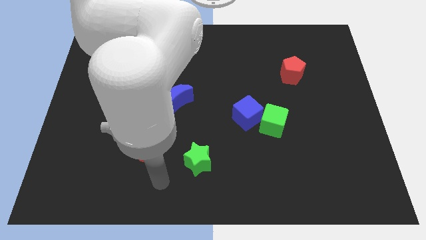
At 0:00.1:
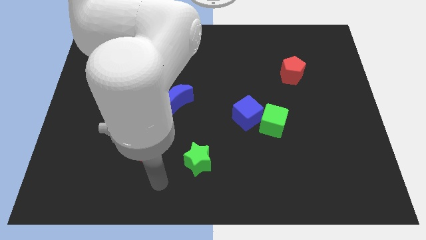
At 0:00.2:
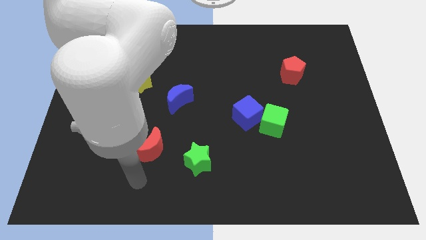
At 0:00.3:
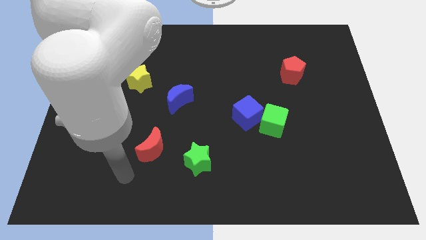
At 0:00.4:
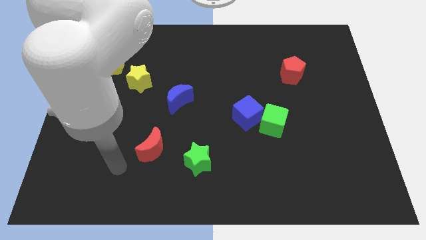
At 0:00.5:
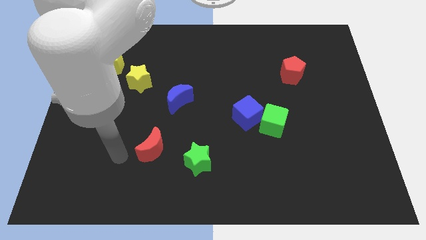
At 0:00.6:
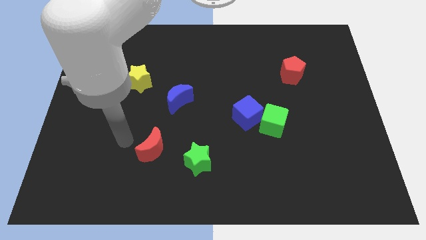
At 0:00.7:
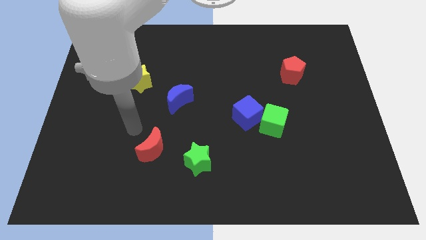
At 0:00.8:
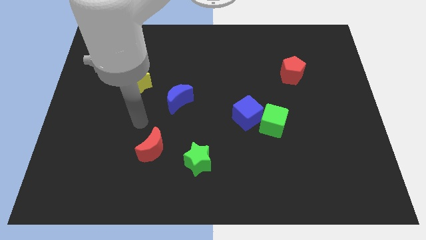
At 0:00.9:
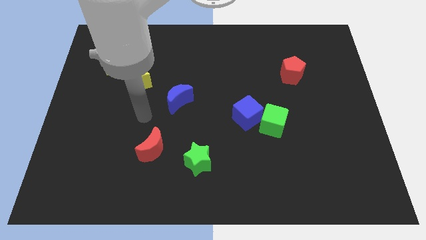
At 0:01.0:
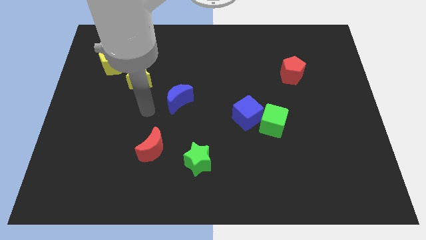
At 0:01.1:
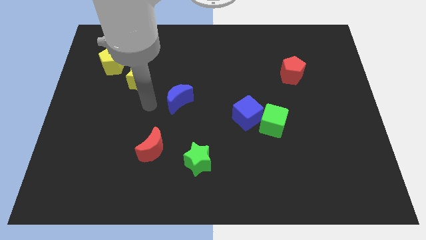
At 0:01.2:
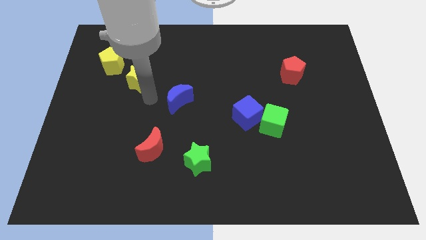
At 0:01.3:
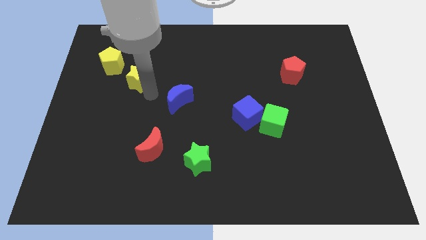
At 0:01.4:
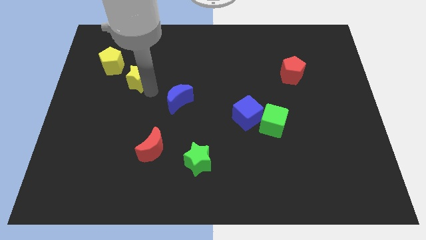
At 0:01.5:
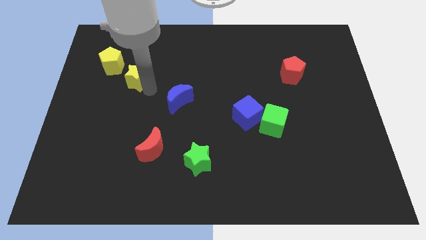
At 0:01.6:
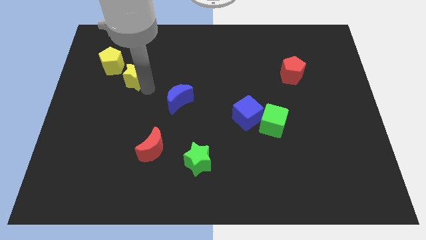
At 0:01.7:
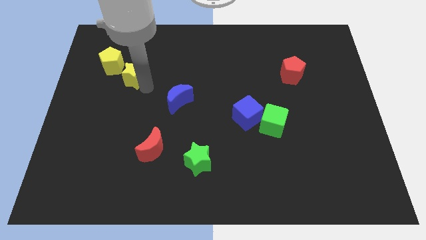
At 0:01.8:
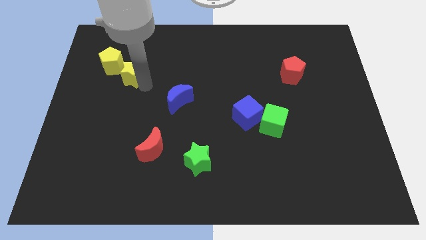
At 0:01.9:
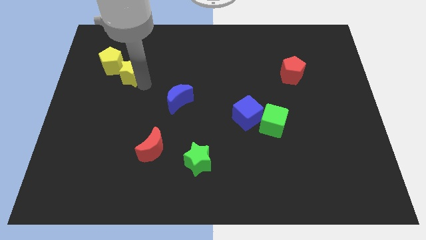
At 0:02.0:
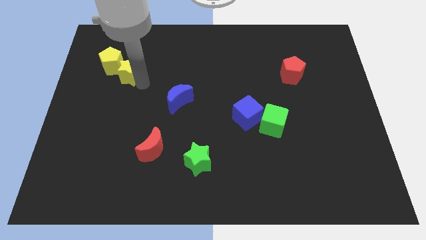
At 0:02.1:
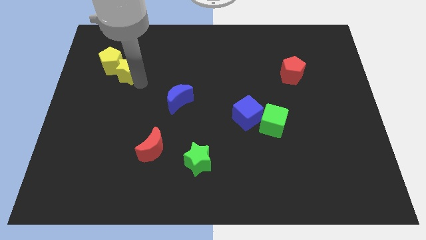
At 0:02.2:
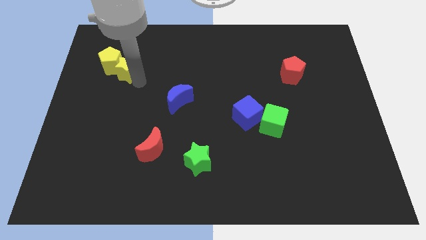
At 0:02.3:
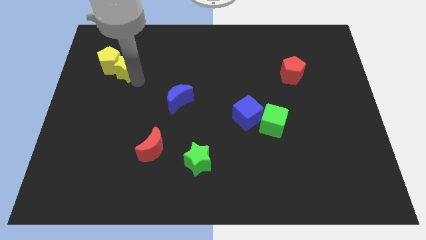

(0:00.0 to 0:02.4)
slide the yellow star close to the yellow pentagon

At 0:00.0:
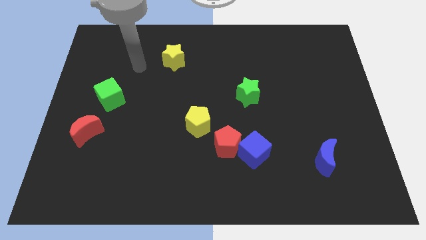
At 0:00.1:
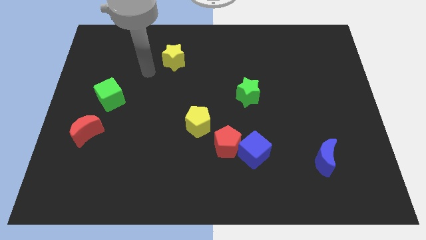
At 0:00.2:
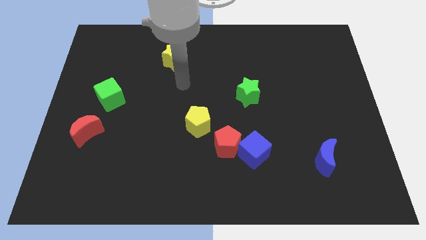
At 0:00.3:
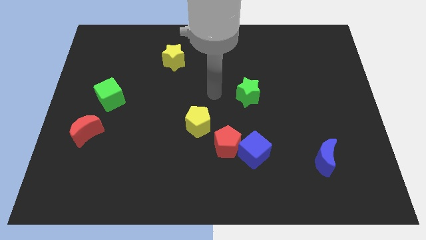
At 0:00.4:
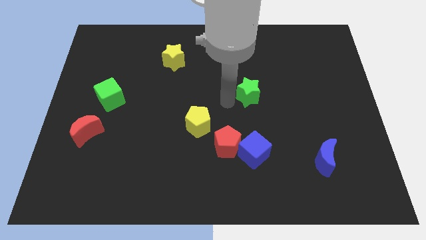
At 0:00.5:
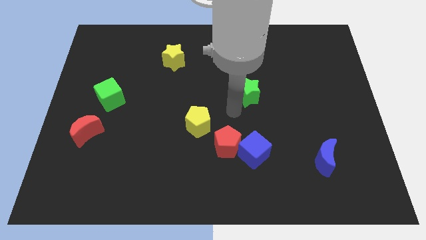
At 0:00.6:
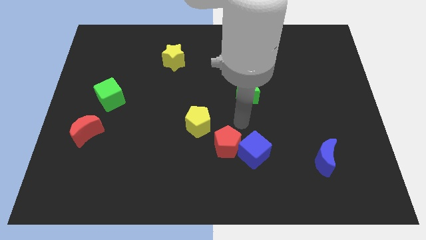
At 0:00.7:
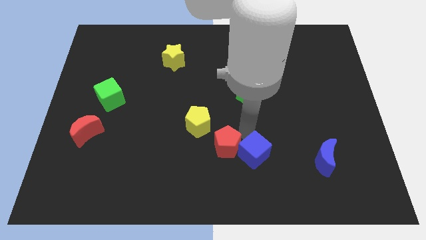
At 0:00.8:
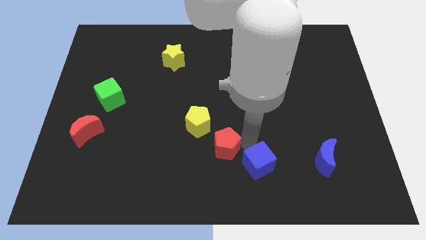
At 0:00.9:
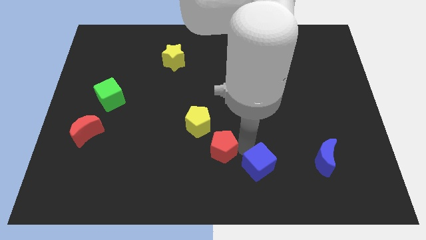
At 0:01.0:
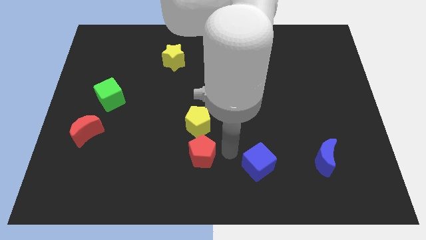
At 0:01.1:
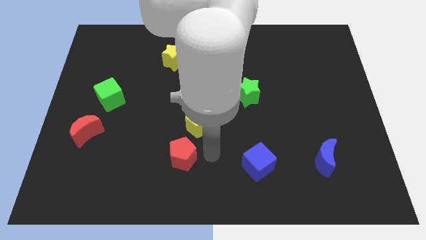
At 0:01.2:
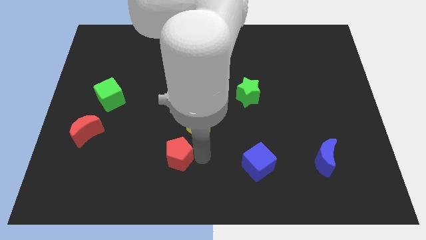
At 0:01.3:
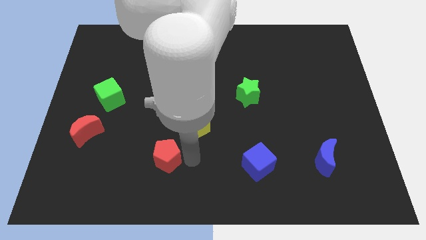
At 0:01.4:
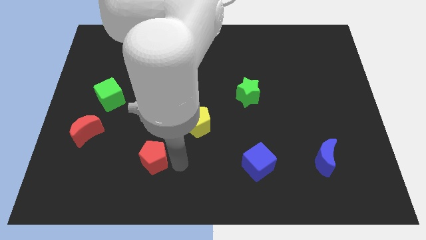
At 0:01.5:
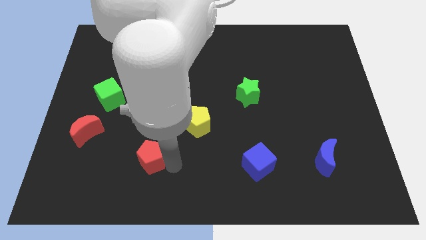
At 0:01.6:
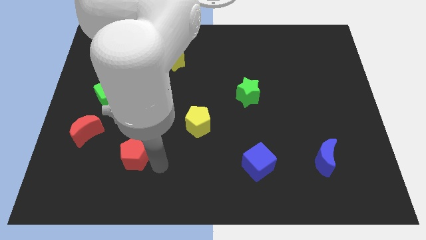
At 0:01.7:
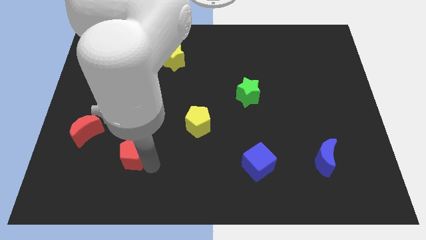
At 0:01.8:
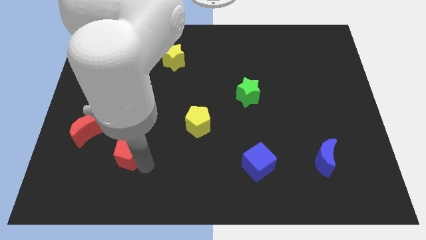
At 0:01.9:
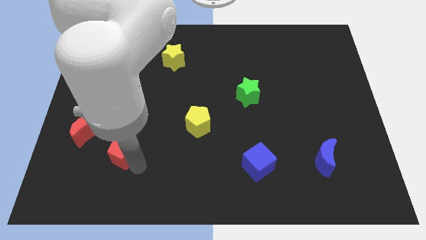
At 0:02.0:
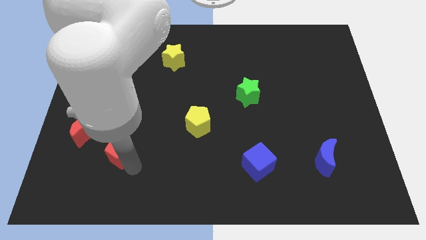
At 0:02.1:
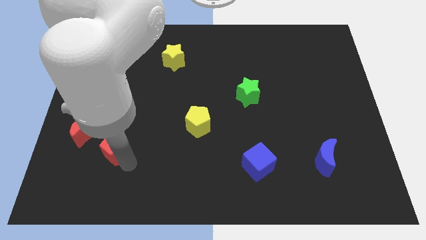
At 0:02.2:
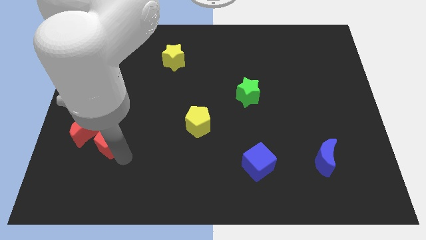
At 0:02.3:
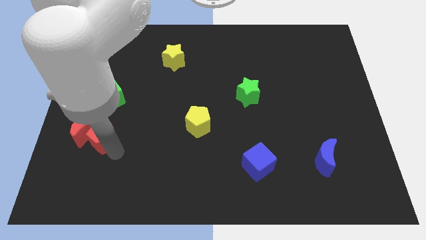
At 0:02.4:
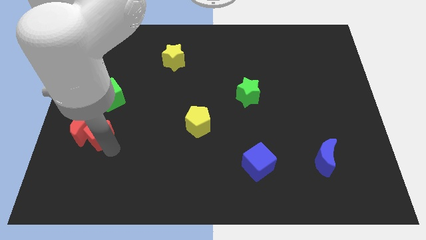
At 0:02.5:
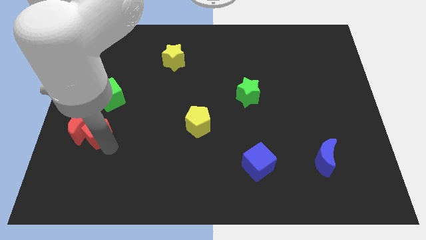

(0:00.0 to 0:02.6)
put the red pentagon next to the red moon

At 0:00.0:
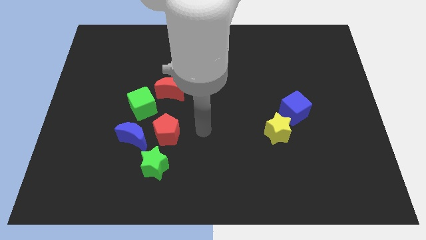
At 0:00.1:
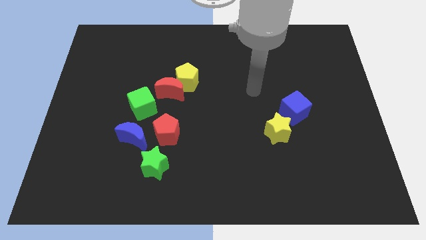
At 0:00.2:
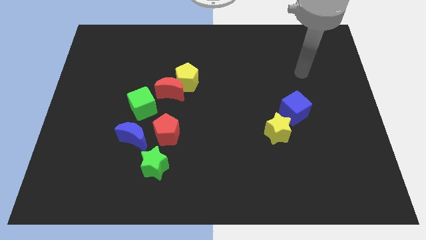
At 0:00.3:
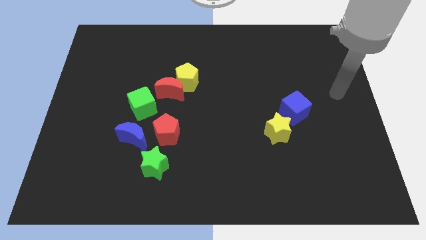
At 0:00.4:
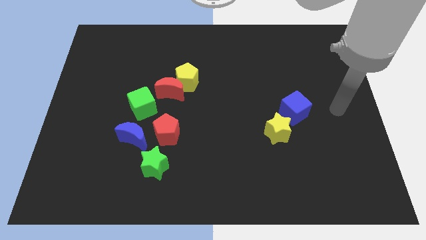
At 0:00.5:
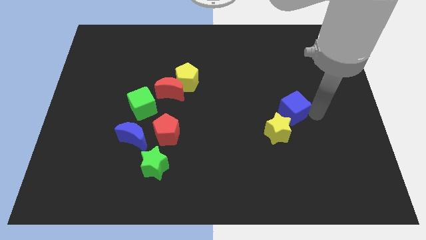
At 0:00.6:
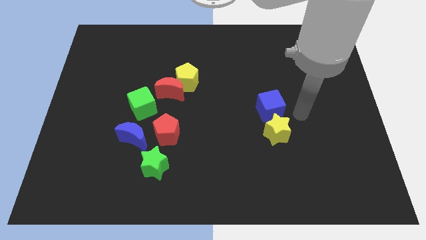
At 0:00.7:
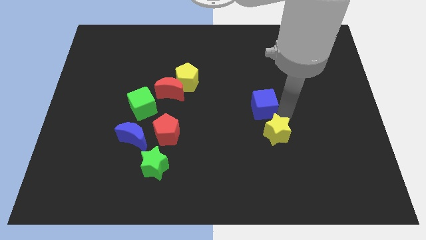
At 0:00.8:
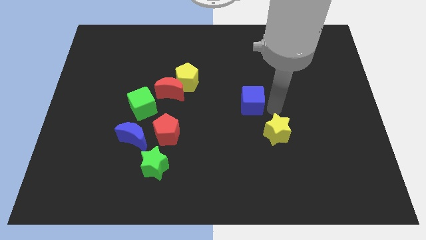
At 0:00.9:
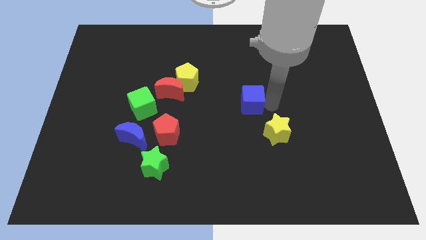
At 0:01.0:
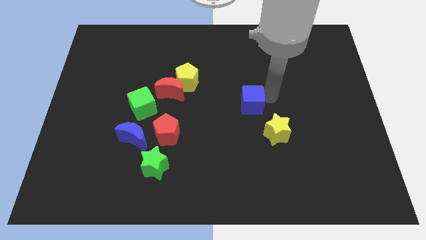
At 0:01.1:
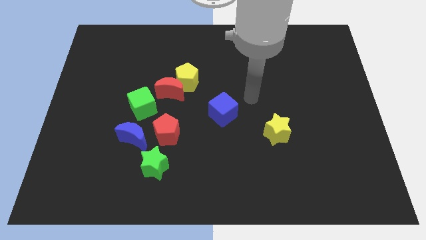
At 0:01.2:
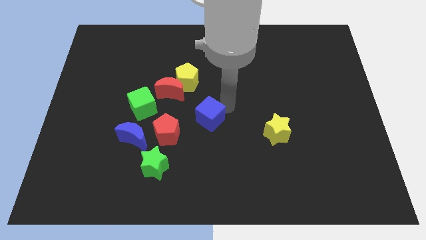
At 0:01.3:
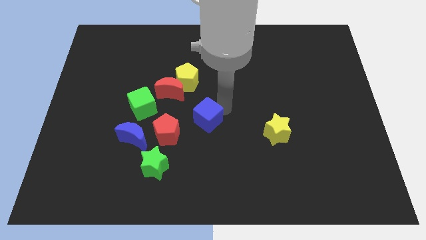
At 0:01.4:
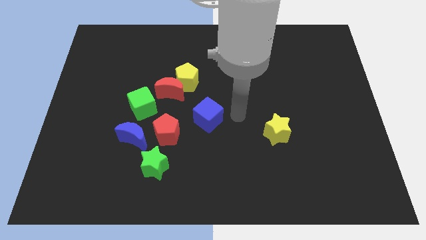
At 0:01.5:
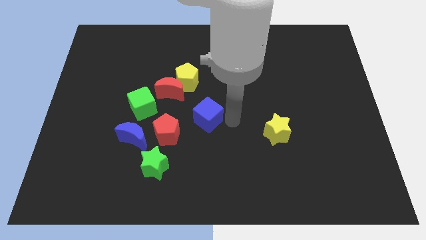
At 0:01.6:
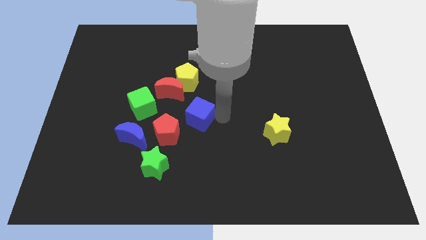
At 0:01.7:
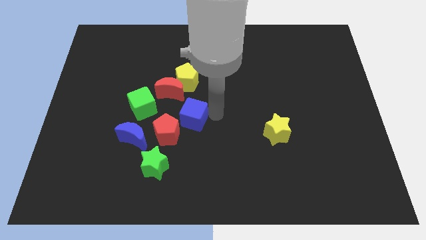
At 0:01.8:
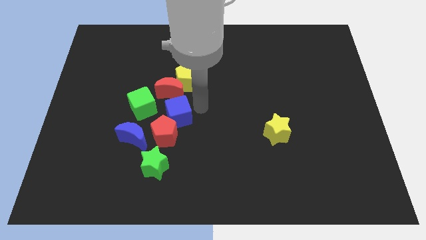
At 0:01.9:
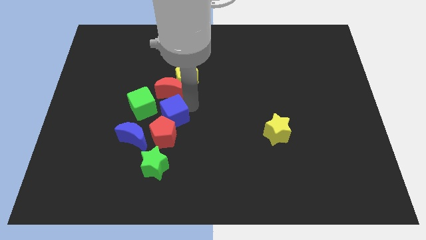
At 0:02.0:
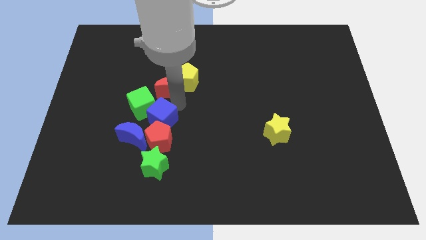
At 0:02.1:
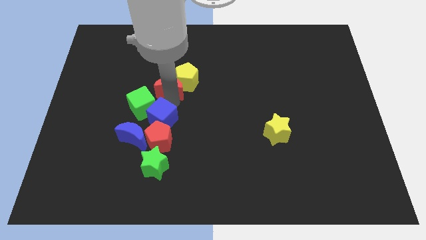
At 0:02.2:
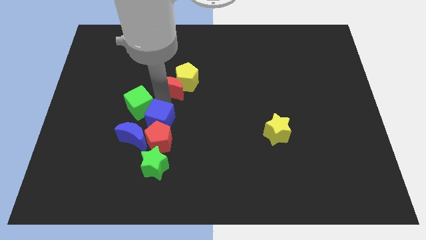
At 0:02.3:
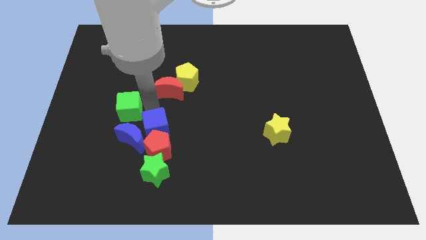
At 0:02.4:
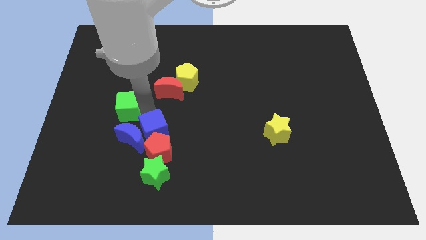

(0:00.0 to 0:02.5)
put the blue cube next to the blue moon

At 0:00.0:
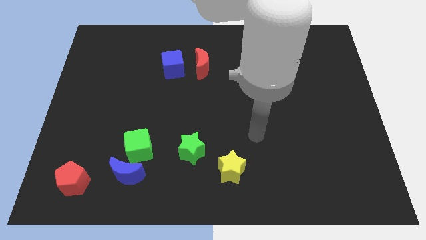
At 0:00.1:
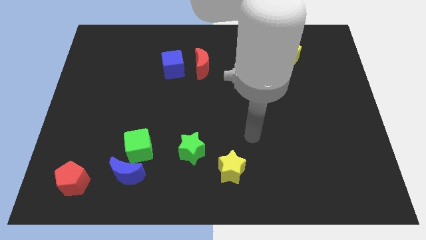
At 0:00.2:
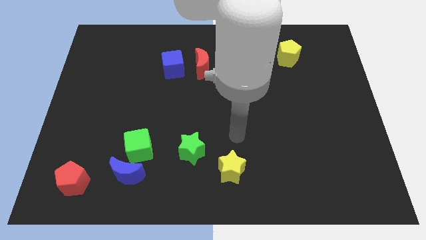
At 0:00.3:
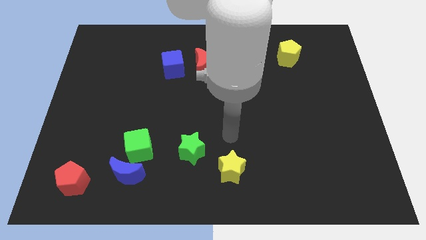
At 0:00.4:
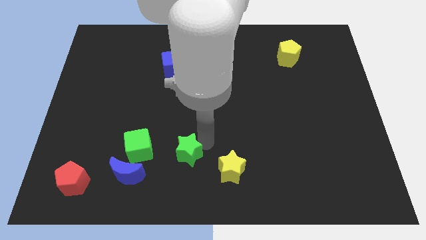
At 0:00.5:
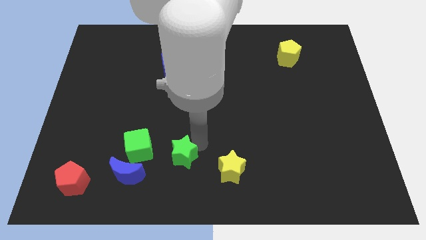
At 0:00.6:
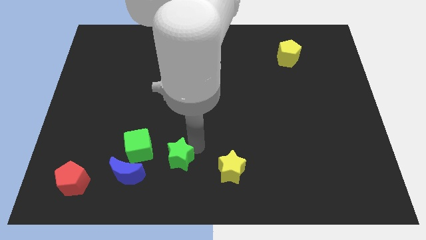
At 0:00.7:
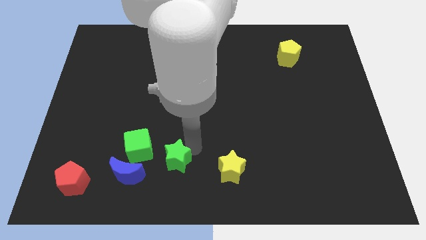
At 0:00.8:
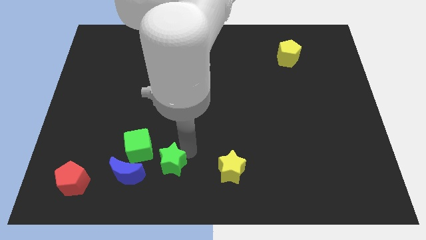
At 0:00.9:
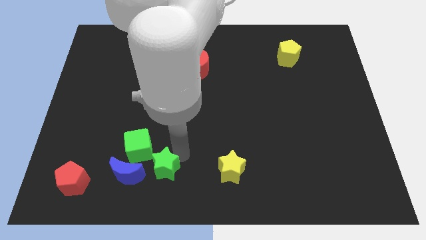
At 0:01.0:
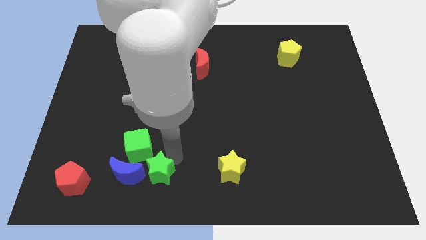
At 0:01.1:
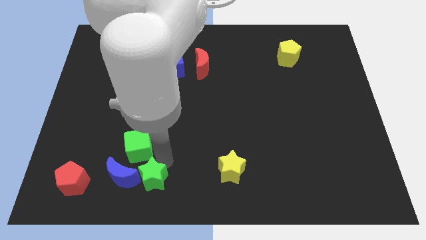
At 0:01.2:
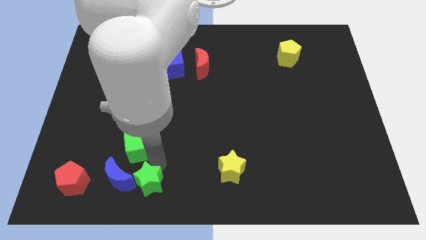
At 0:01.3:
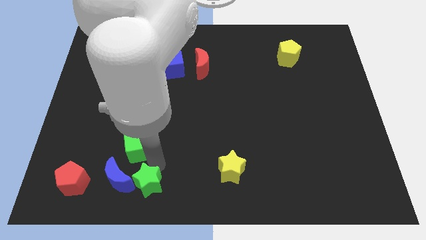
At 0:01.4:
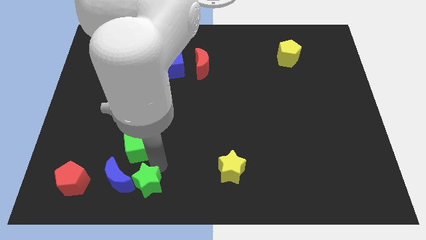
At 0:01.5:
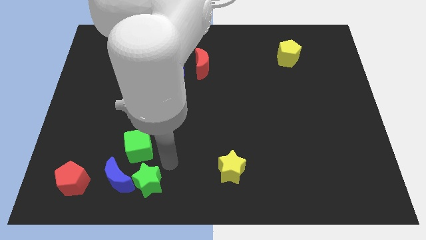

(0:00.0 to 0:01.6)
put the green star towards the blue moon
